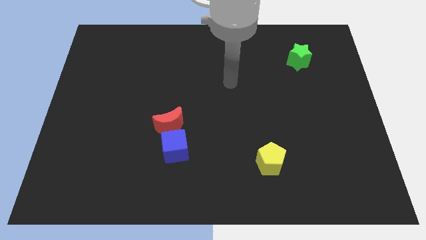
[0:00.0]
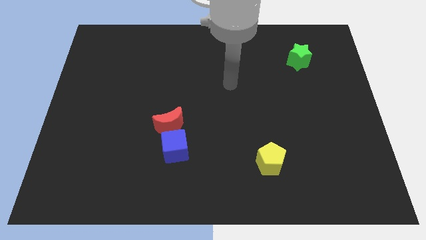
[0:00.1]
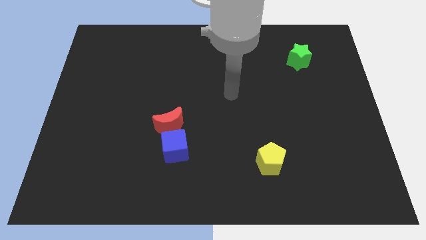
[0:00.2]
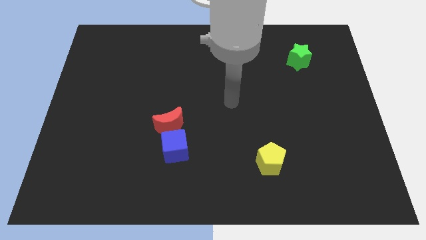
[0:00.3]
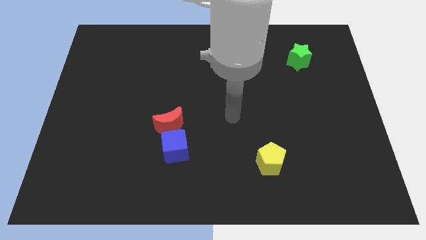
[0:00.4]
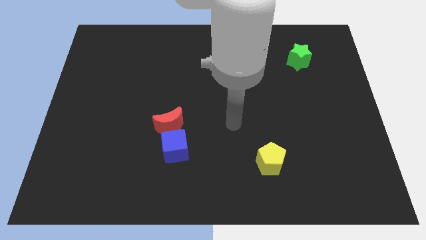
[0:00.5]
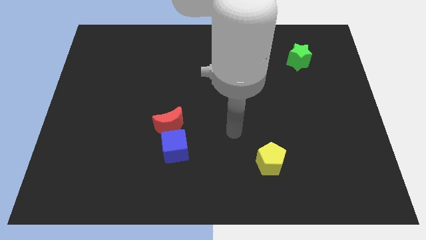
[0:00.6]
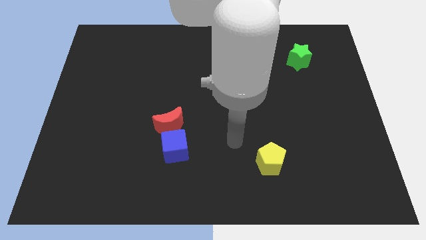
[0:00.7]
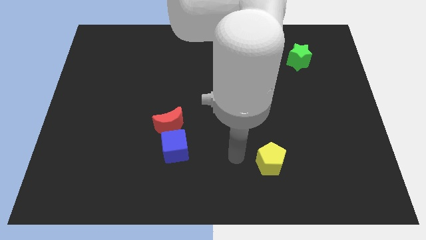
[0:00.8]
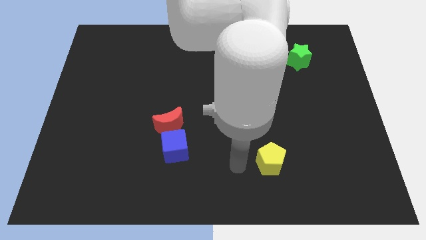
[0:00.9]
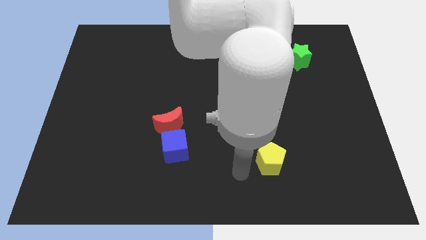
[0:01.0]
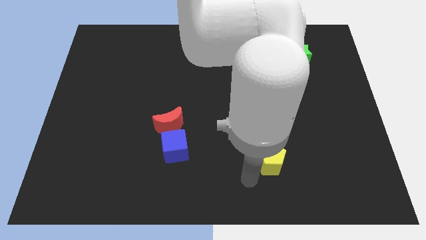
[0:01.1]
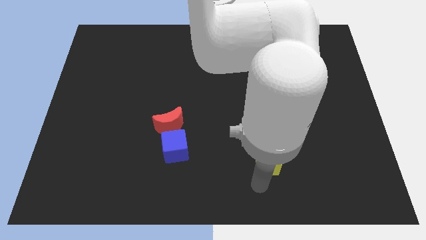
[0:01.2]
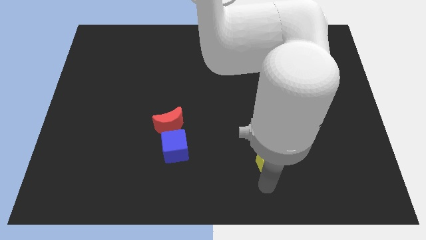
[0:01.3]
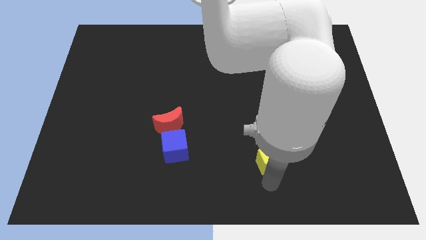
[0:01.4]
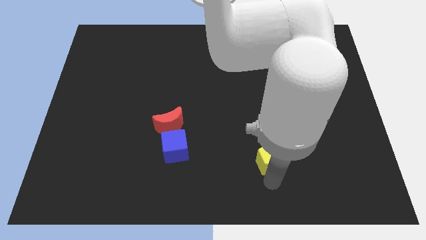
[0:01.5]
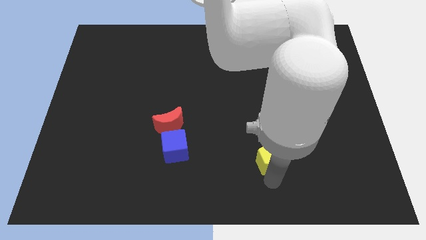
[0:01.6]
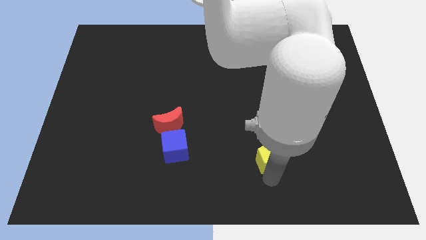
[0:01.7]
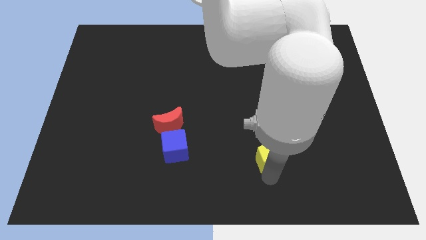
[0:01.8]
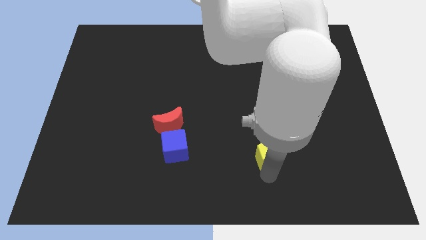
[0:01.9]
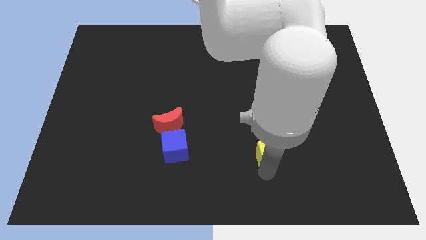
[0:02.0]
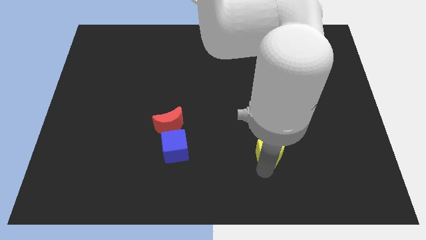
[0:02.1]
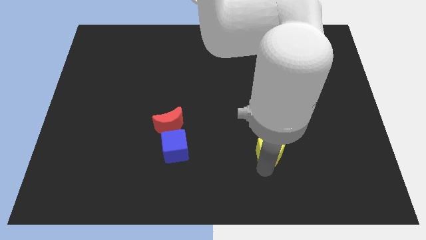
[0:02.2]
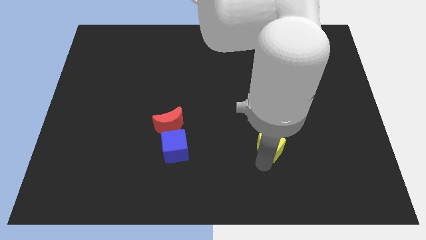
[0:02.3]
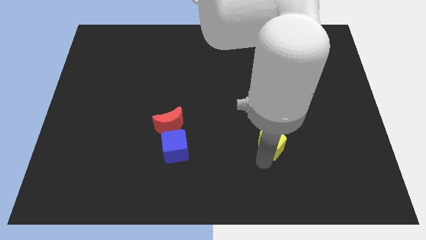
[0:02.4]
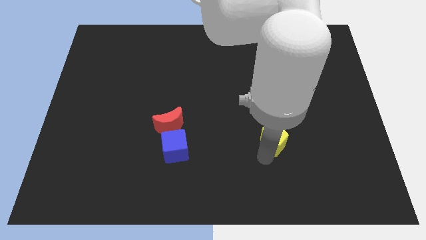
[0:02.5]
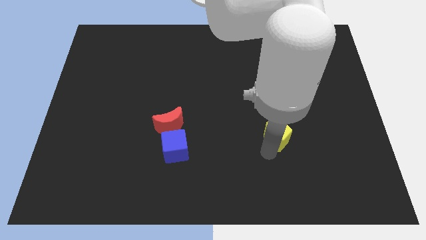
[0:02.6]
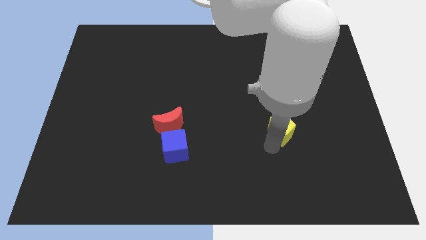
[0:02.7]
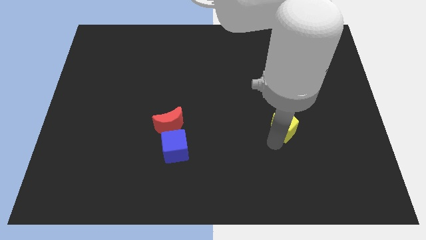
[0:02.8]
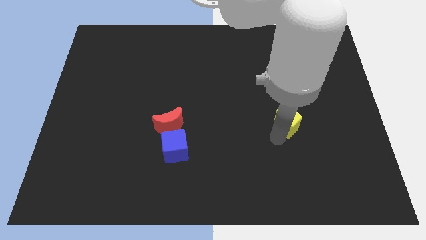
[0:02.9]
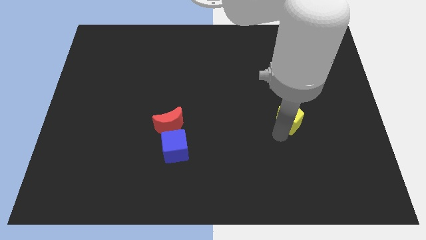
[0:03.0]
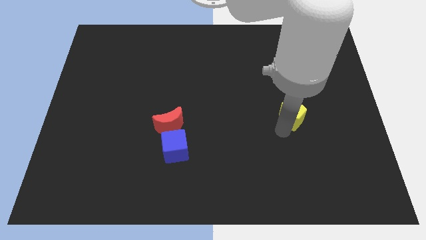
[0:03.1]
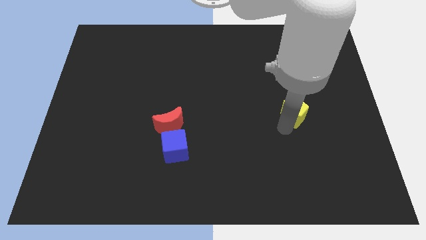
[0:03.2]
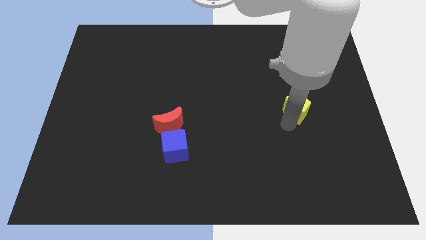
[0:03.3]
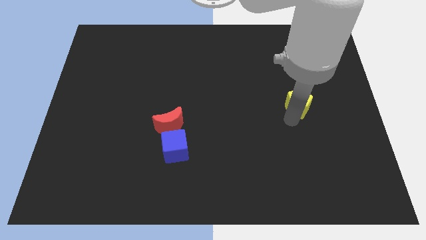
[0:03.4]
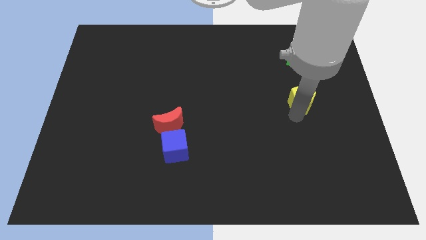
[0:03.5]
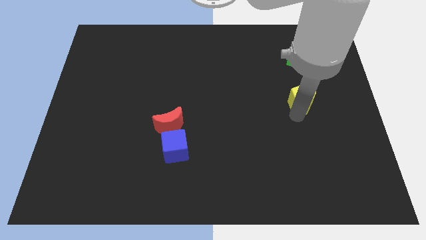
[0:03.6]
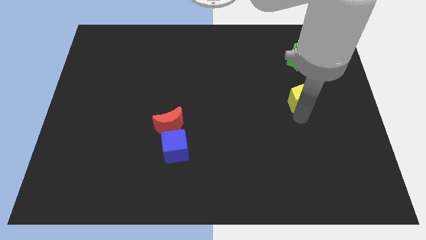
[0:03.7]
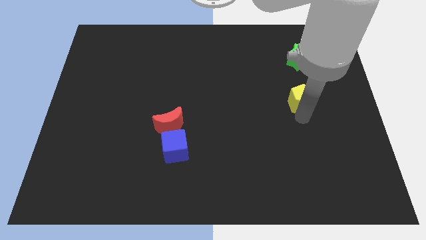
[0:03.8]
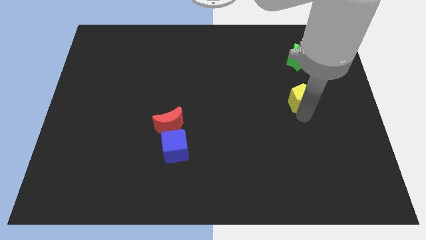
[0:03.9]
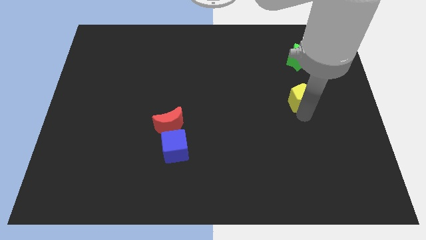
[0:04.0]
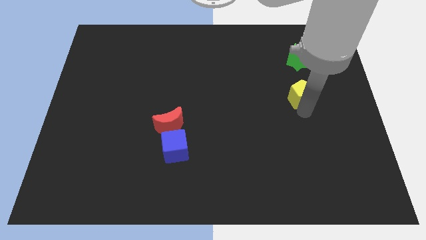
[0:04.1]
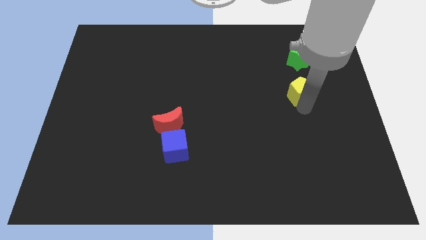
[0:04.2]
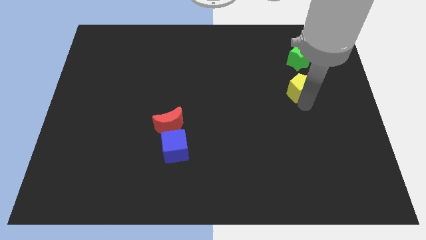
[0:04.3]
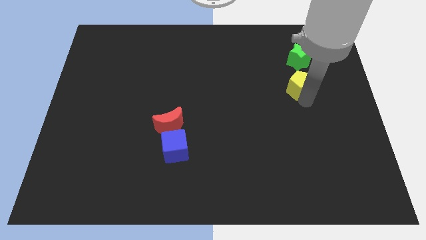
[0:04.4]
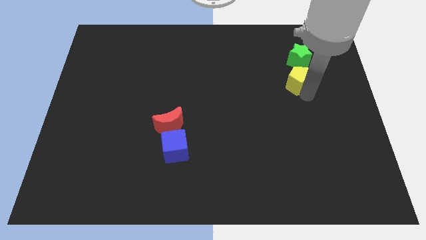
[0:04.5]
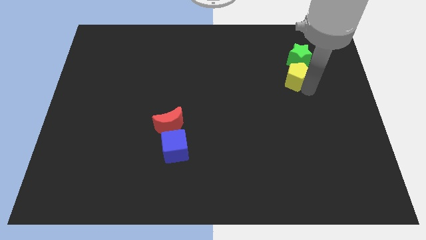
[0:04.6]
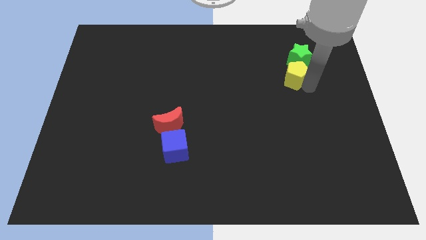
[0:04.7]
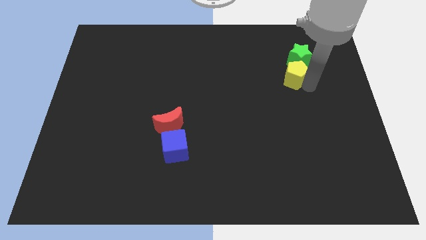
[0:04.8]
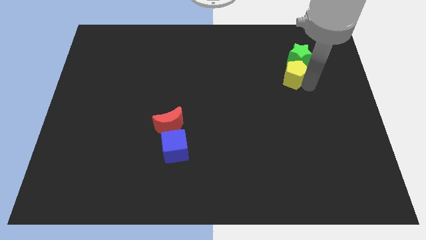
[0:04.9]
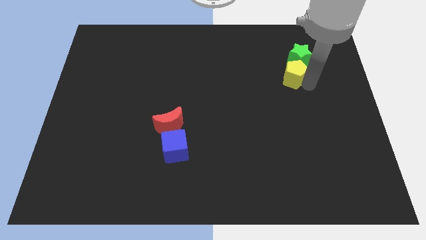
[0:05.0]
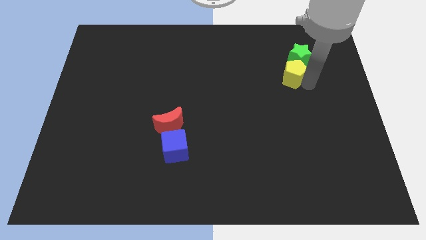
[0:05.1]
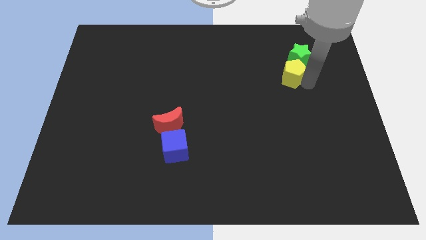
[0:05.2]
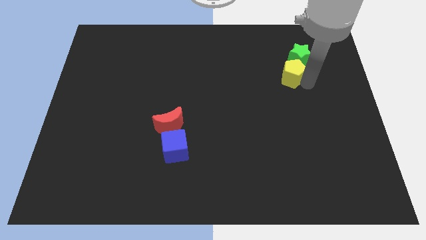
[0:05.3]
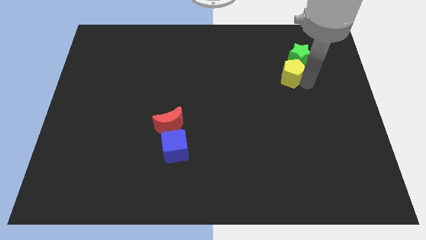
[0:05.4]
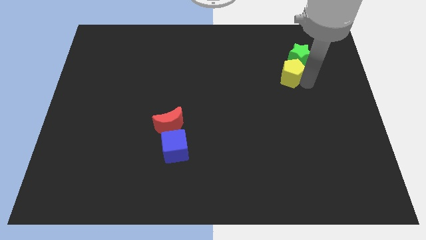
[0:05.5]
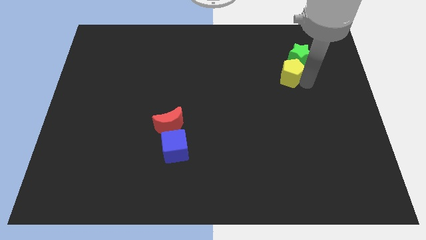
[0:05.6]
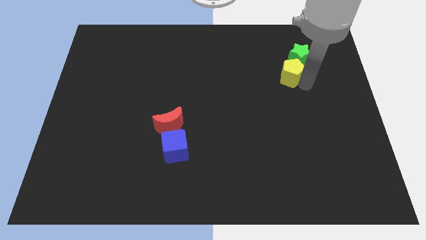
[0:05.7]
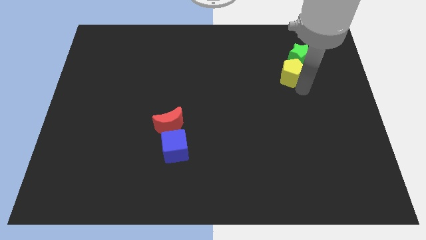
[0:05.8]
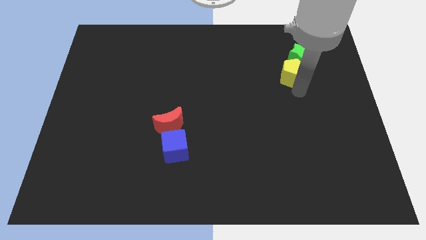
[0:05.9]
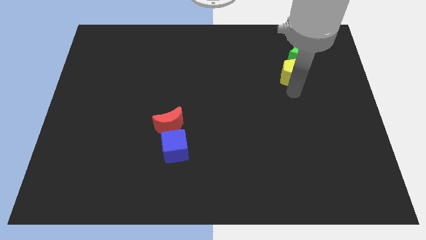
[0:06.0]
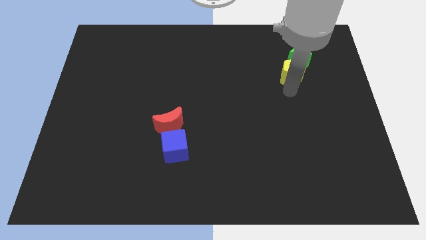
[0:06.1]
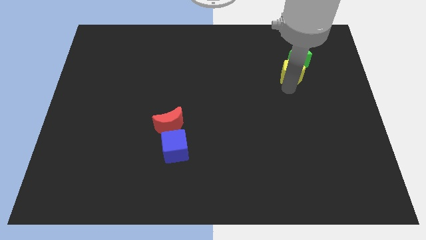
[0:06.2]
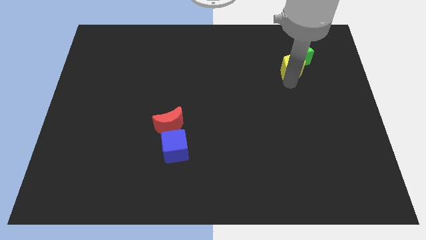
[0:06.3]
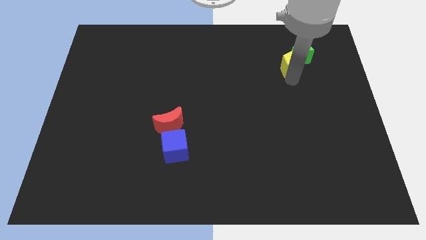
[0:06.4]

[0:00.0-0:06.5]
move the pentagon to the green star

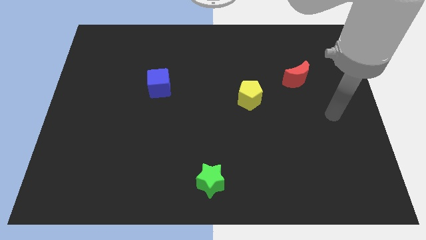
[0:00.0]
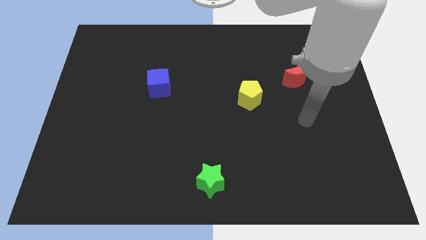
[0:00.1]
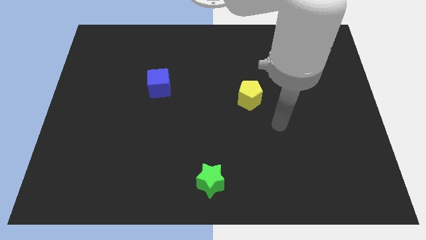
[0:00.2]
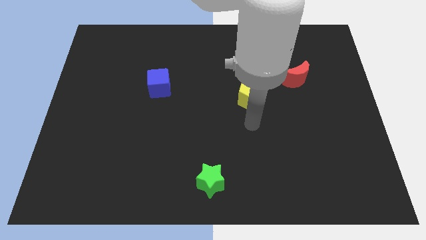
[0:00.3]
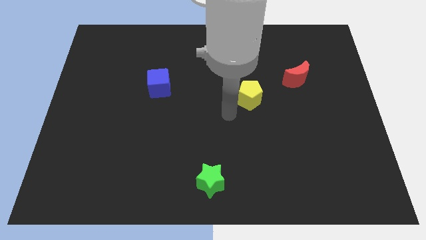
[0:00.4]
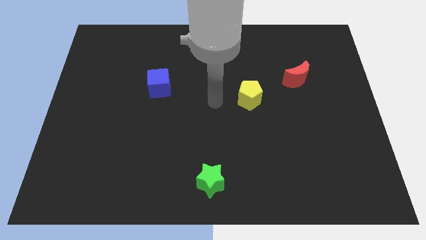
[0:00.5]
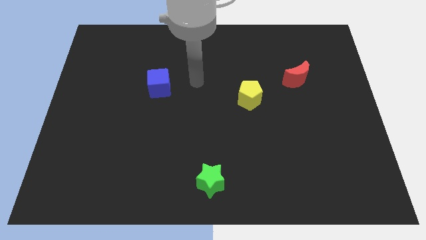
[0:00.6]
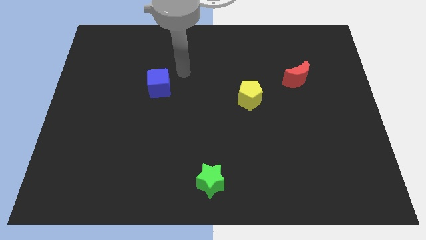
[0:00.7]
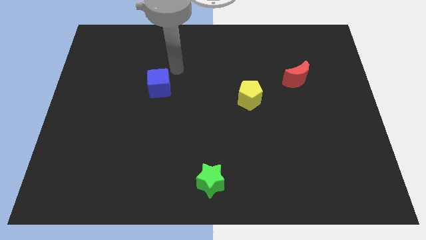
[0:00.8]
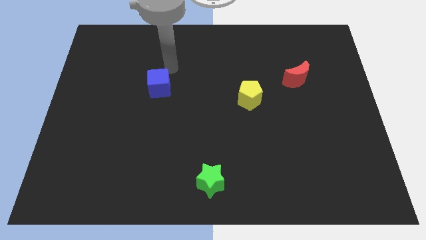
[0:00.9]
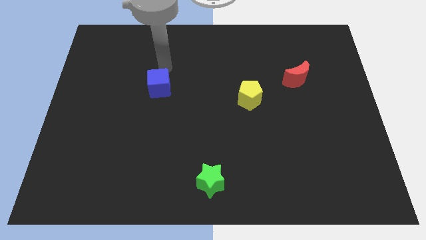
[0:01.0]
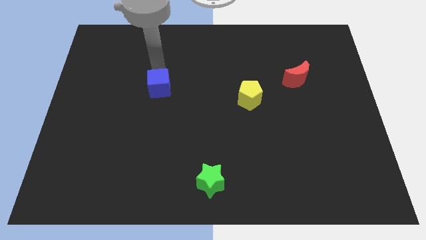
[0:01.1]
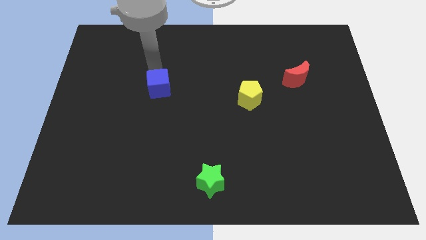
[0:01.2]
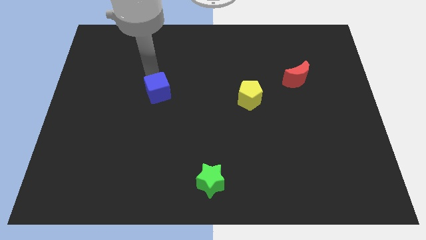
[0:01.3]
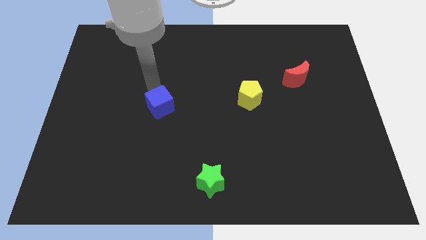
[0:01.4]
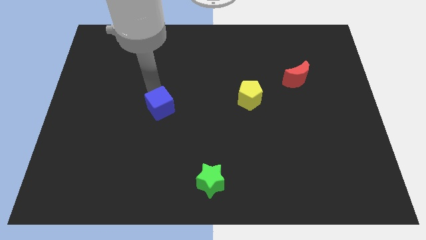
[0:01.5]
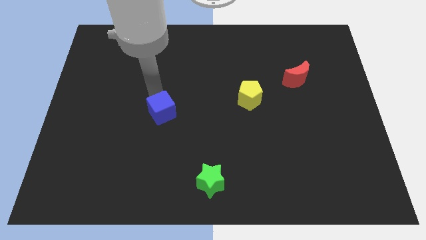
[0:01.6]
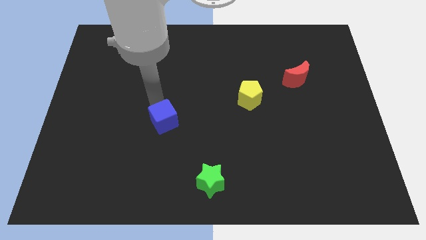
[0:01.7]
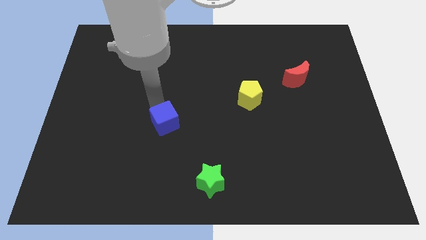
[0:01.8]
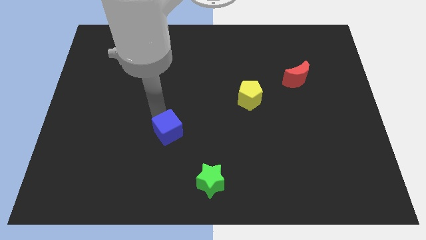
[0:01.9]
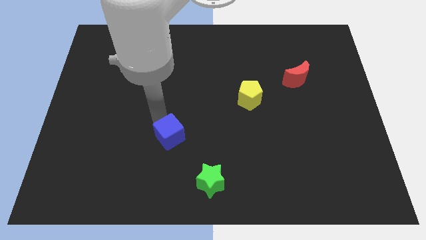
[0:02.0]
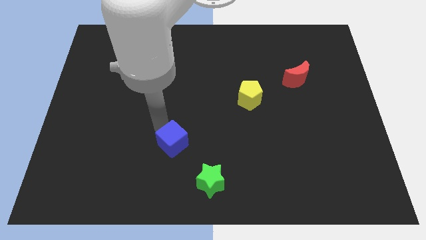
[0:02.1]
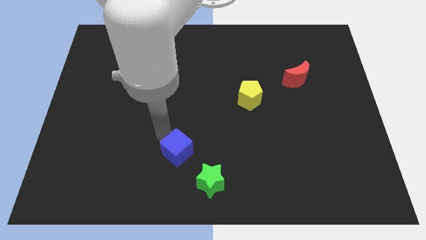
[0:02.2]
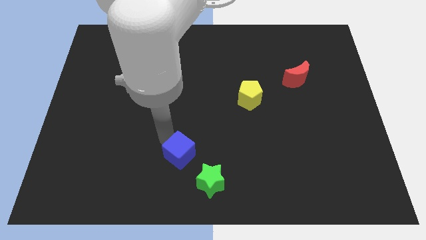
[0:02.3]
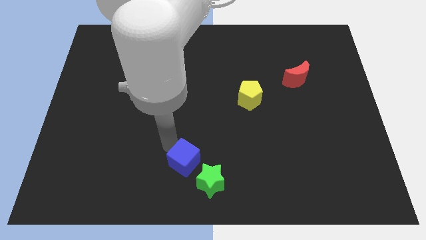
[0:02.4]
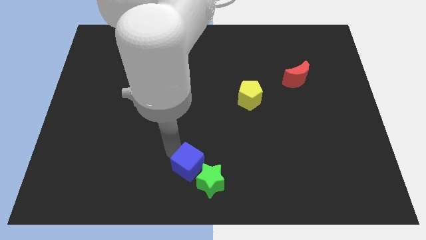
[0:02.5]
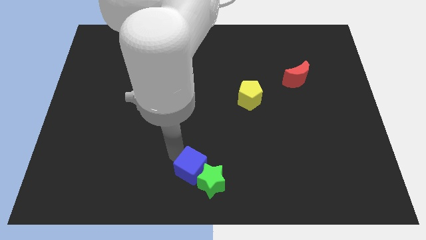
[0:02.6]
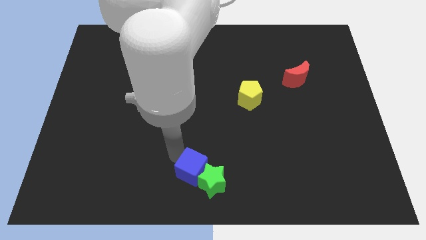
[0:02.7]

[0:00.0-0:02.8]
move the cube towards the star
